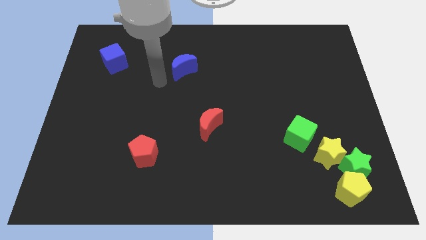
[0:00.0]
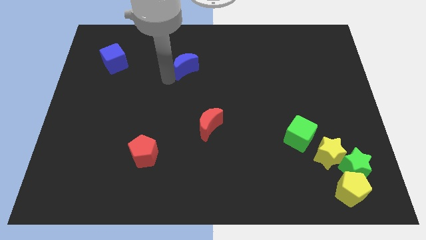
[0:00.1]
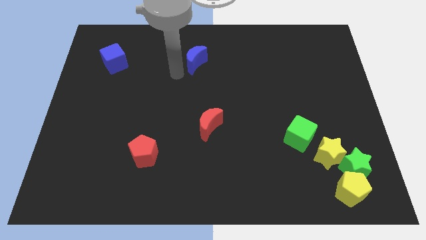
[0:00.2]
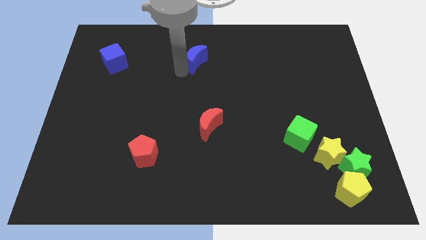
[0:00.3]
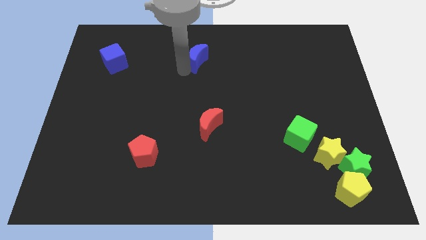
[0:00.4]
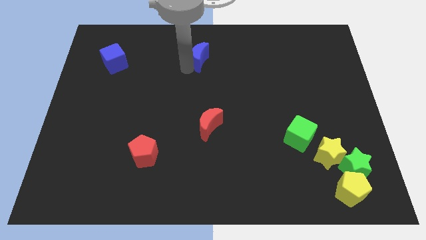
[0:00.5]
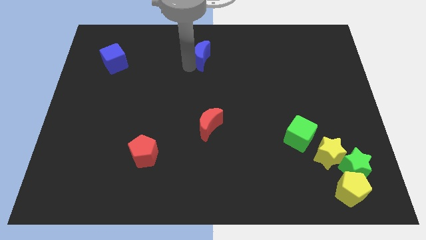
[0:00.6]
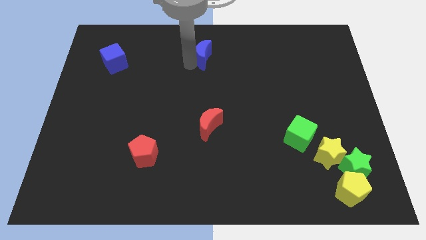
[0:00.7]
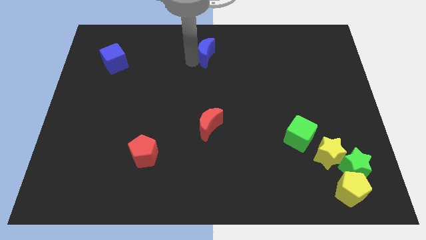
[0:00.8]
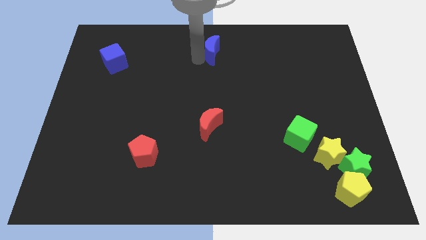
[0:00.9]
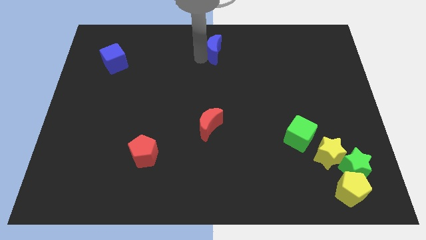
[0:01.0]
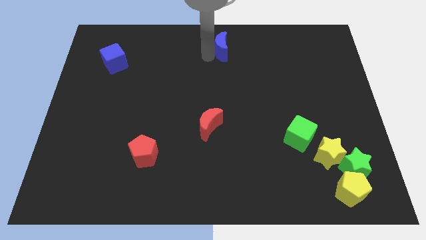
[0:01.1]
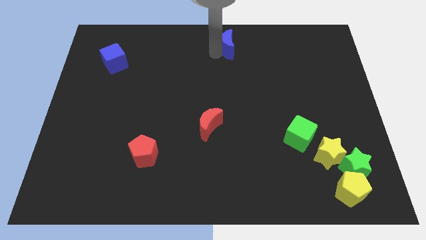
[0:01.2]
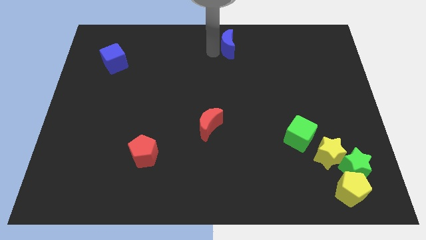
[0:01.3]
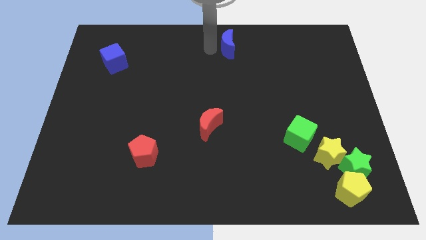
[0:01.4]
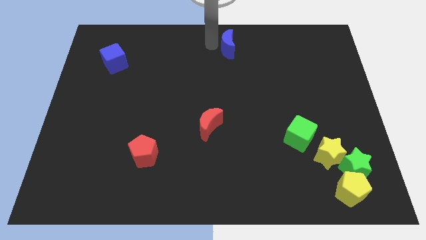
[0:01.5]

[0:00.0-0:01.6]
slide the blue moon towards top center

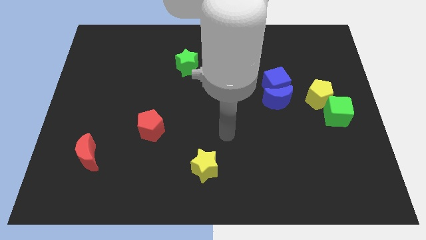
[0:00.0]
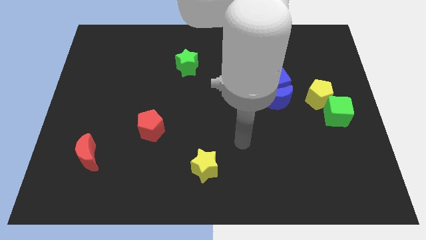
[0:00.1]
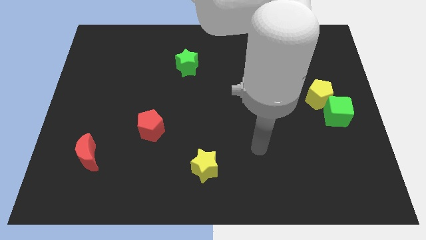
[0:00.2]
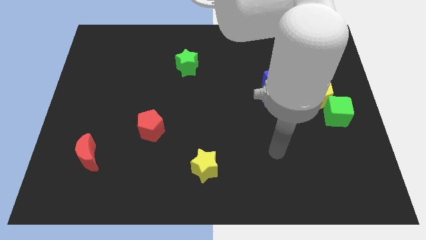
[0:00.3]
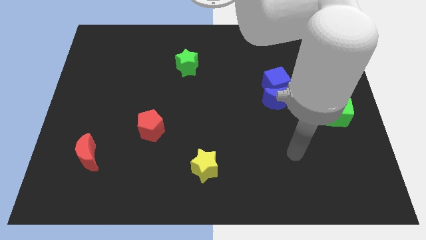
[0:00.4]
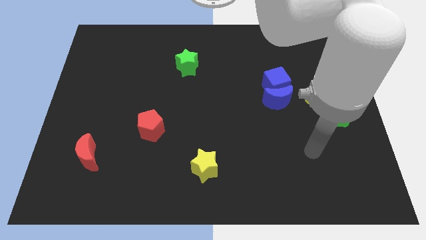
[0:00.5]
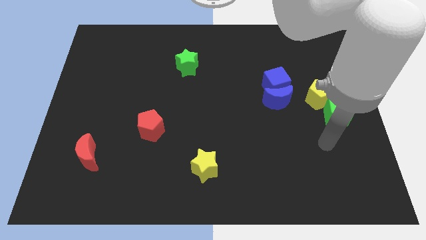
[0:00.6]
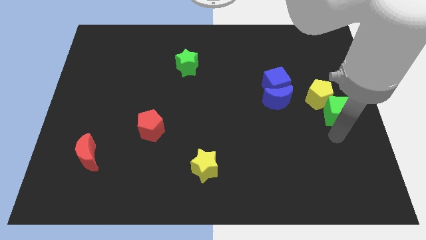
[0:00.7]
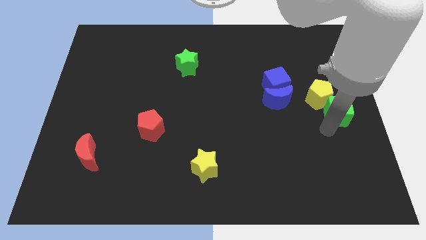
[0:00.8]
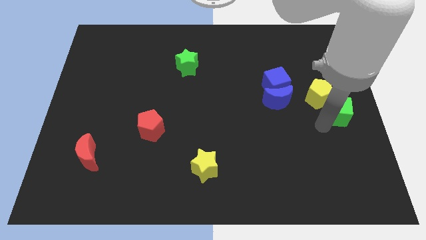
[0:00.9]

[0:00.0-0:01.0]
touch the bottom side of the green cube

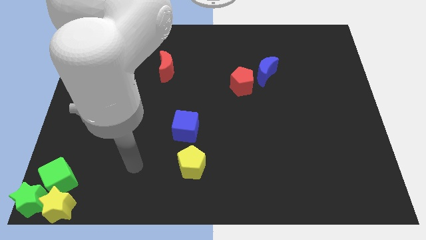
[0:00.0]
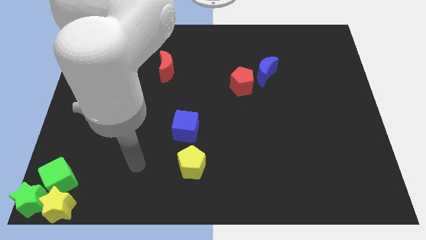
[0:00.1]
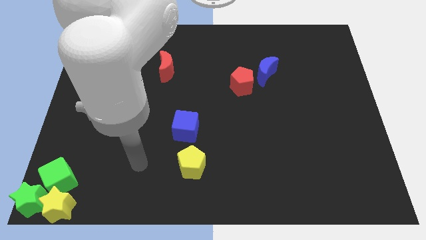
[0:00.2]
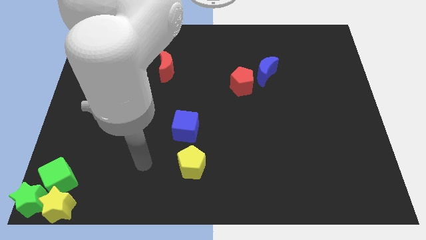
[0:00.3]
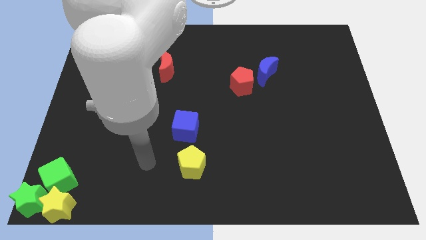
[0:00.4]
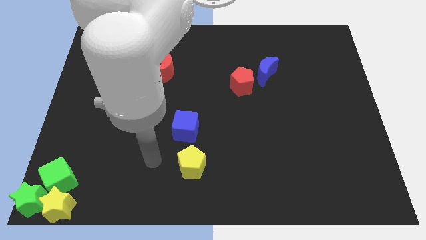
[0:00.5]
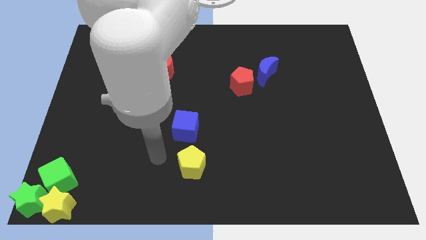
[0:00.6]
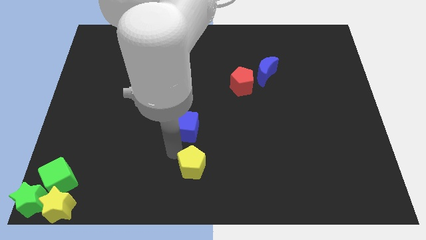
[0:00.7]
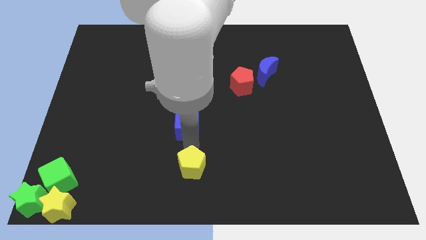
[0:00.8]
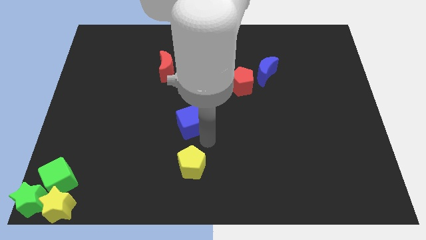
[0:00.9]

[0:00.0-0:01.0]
place your arm to the top of yellow pentagon

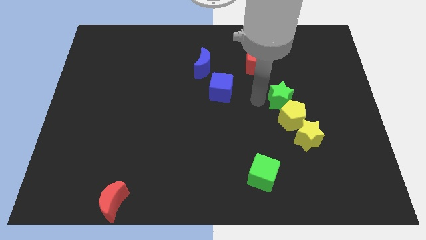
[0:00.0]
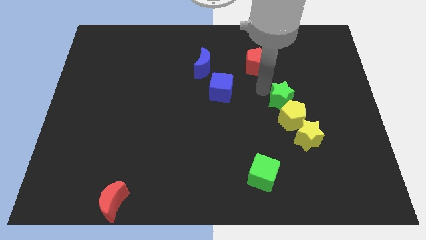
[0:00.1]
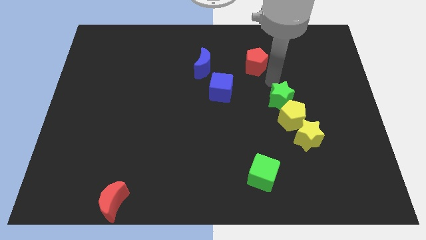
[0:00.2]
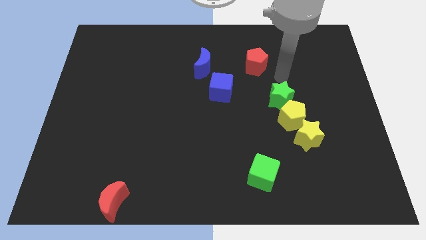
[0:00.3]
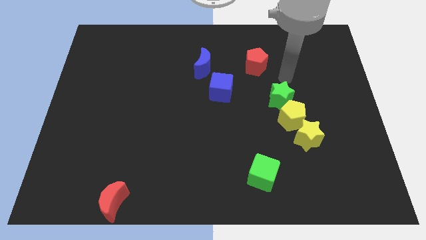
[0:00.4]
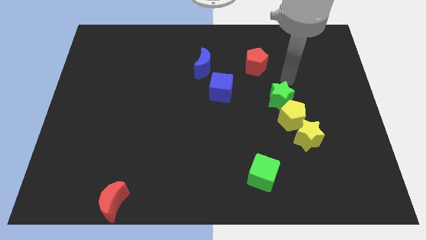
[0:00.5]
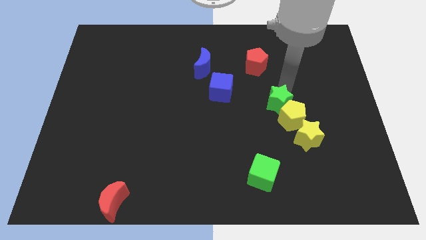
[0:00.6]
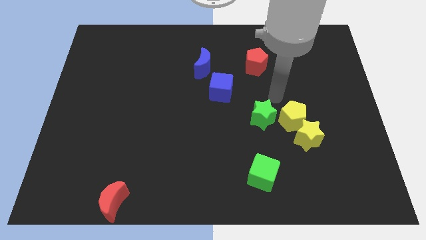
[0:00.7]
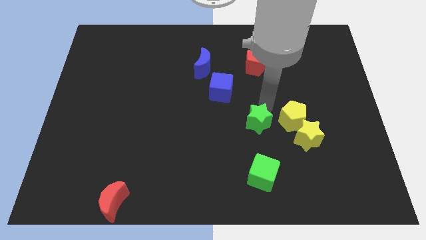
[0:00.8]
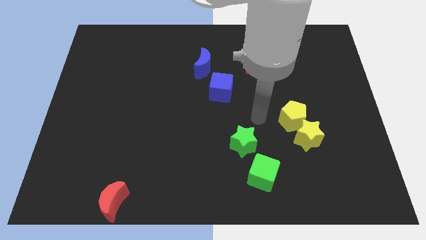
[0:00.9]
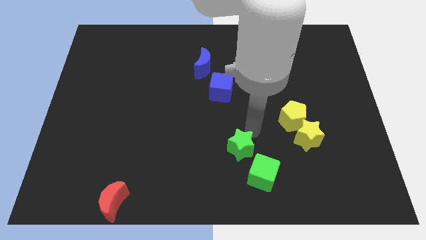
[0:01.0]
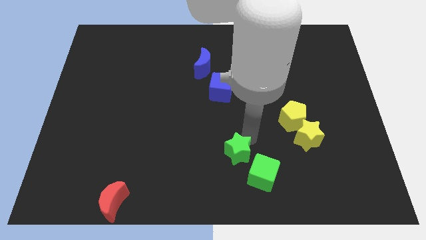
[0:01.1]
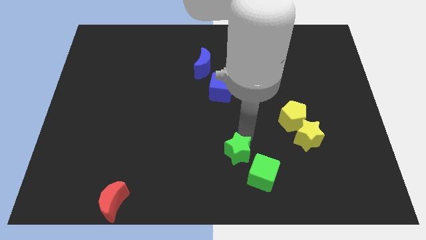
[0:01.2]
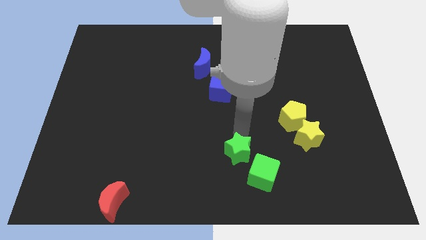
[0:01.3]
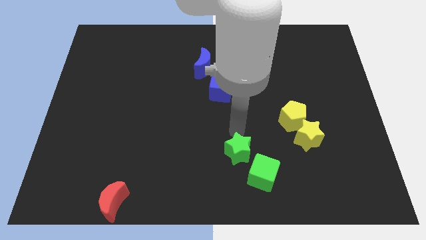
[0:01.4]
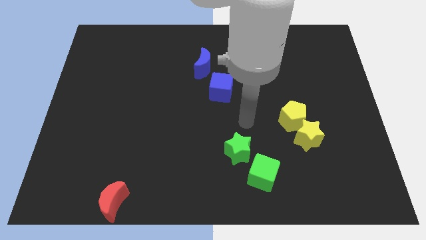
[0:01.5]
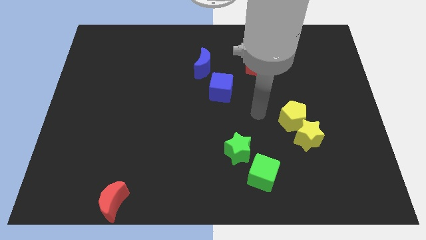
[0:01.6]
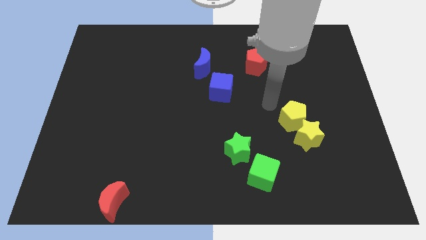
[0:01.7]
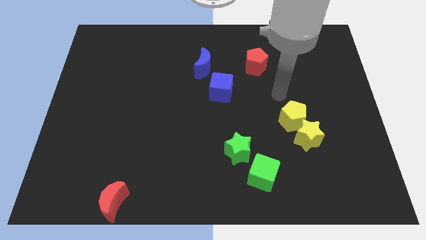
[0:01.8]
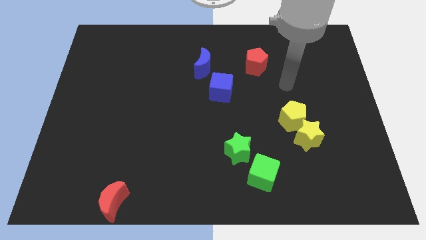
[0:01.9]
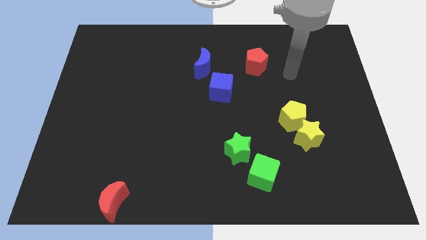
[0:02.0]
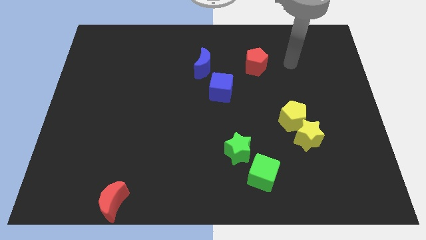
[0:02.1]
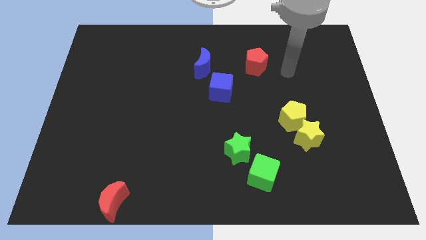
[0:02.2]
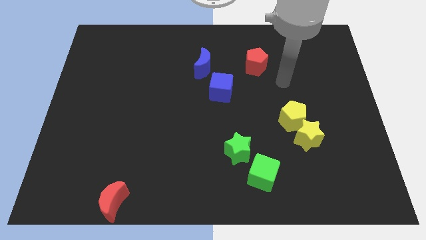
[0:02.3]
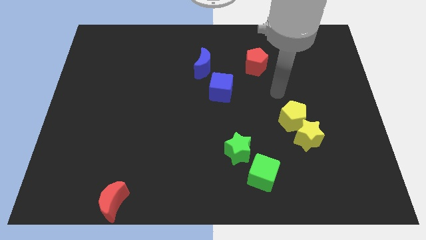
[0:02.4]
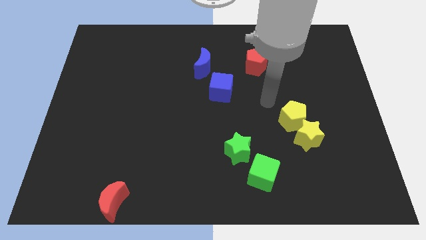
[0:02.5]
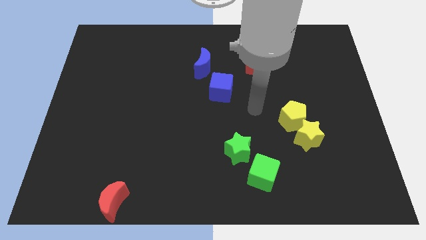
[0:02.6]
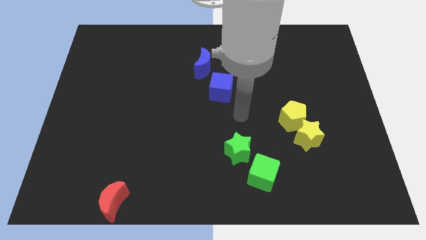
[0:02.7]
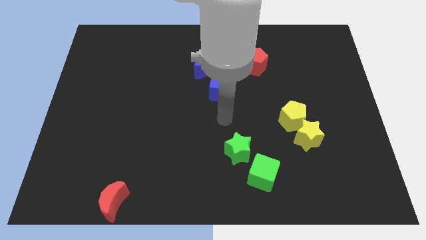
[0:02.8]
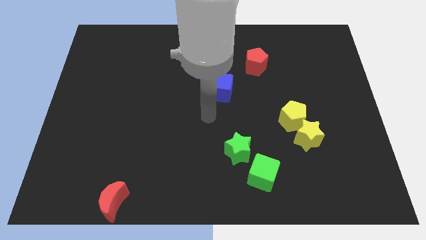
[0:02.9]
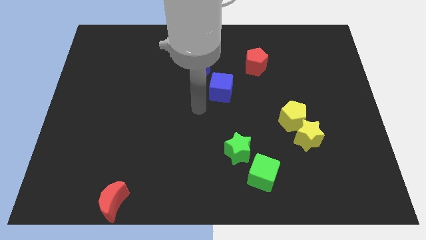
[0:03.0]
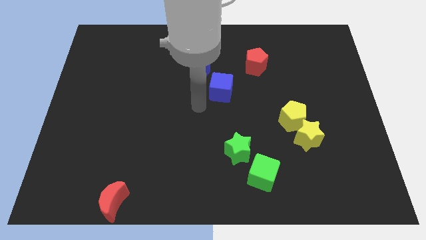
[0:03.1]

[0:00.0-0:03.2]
push the green star towards the green cube and move away

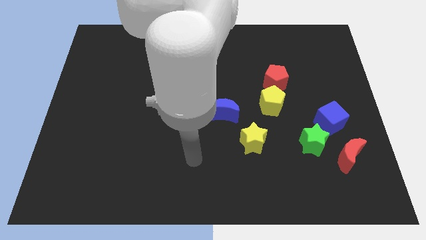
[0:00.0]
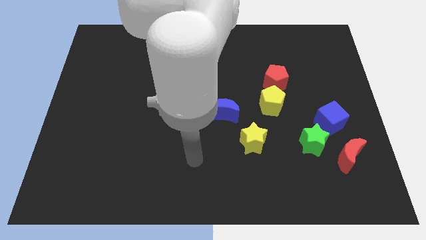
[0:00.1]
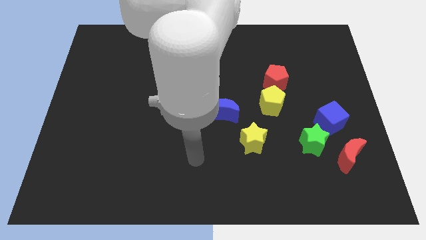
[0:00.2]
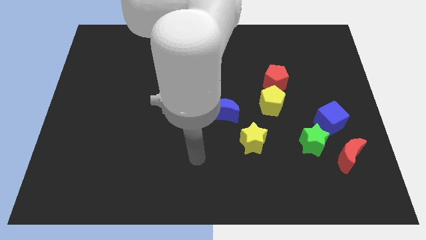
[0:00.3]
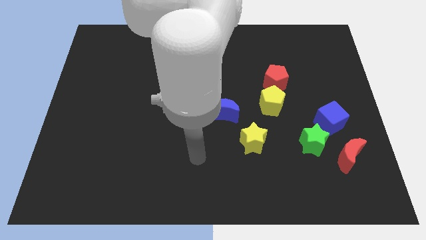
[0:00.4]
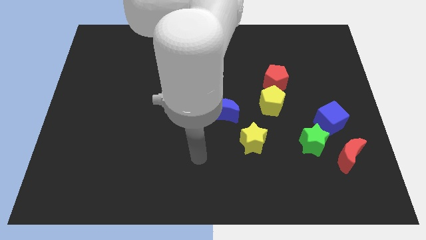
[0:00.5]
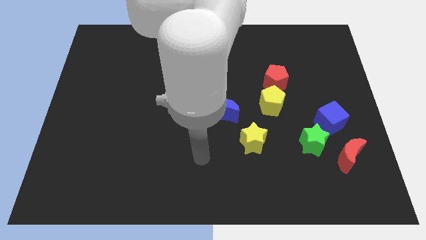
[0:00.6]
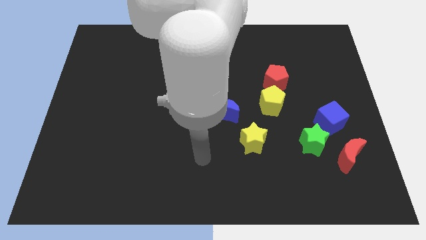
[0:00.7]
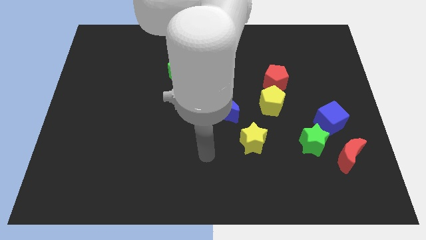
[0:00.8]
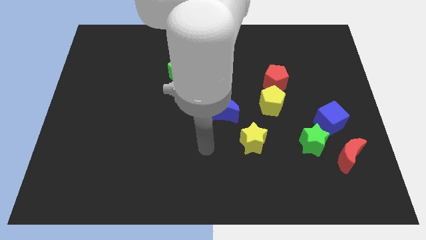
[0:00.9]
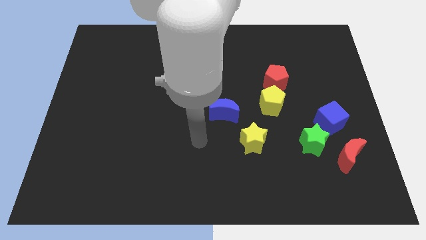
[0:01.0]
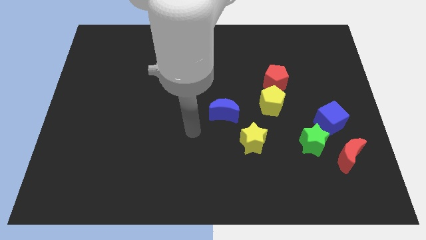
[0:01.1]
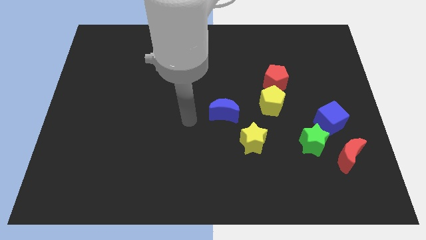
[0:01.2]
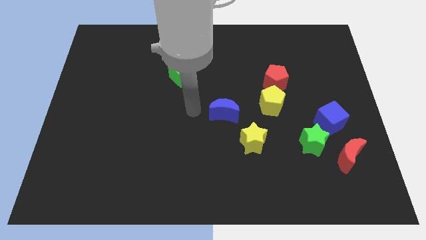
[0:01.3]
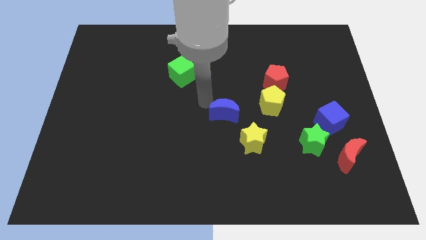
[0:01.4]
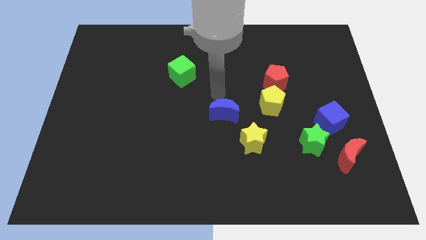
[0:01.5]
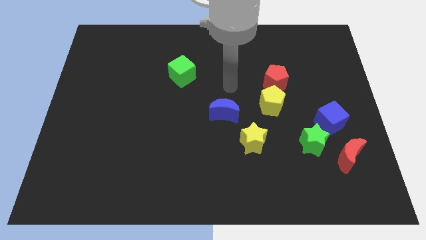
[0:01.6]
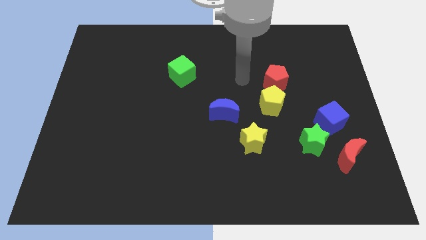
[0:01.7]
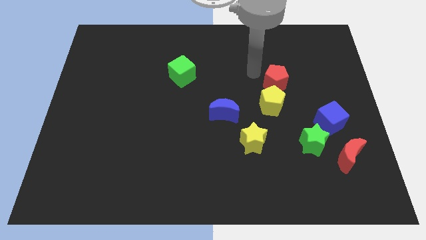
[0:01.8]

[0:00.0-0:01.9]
place your arm towards the red pentagon
